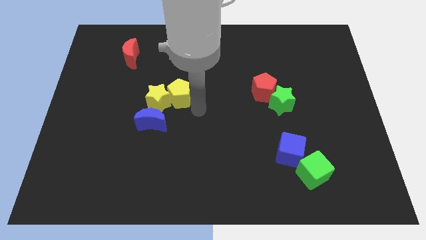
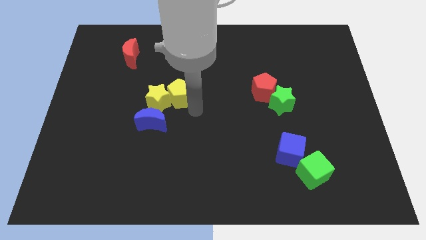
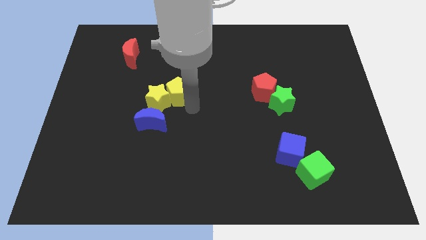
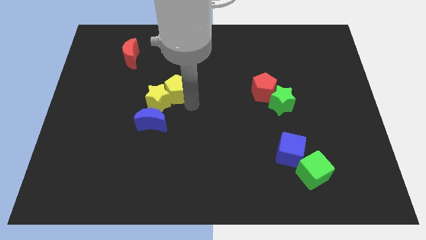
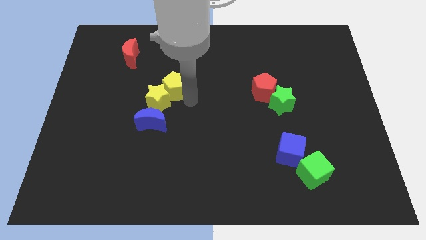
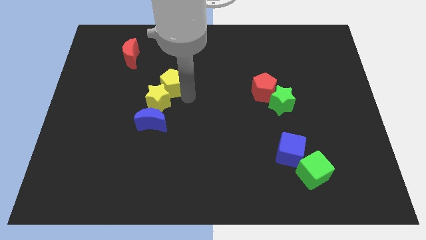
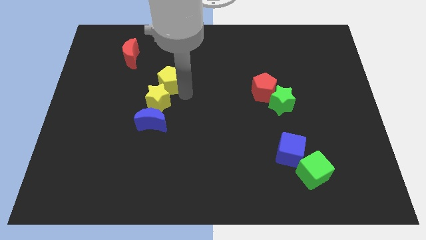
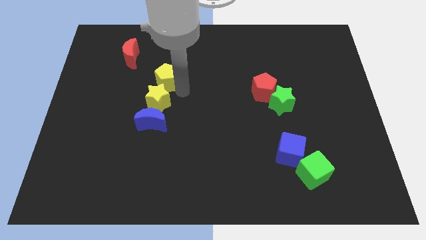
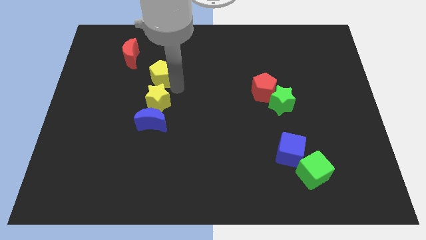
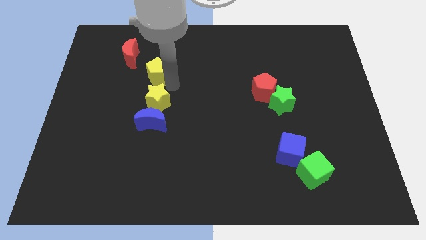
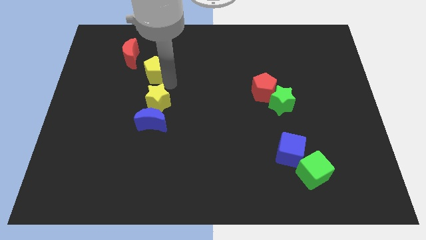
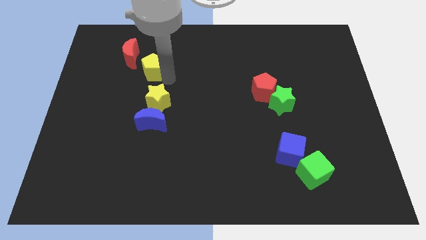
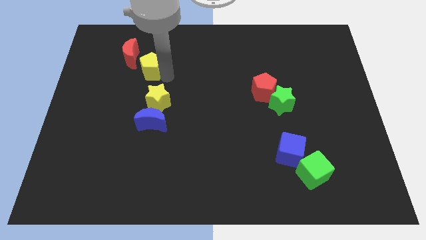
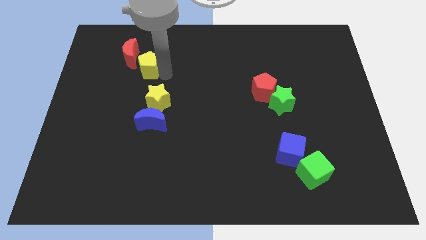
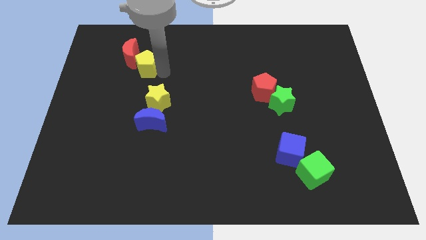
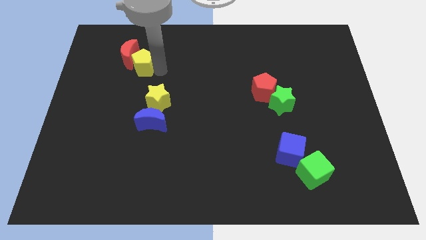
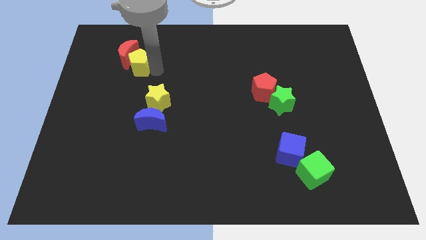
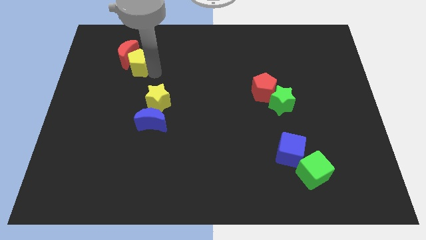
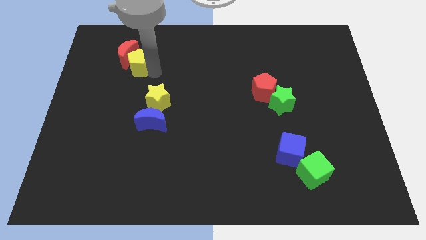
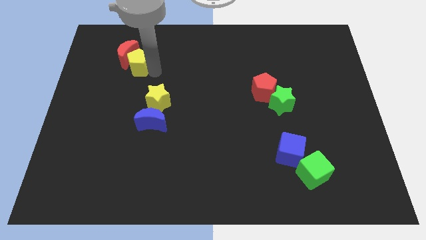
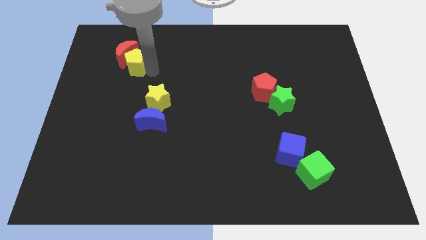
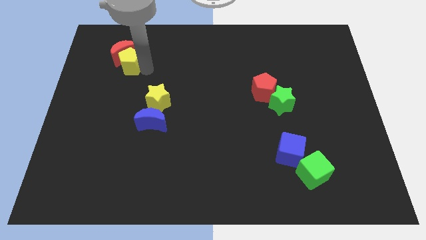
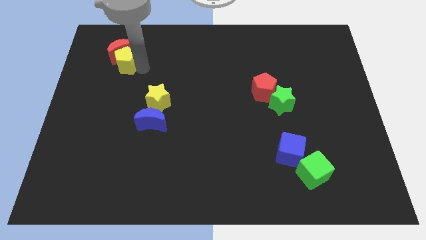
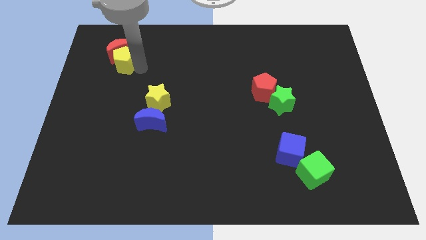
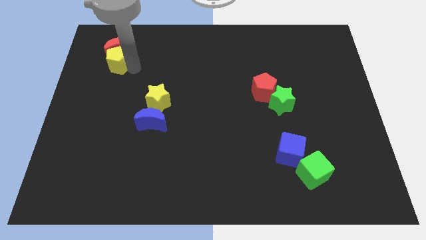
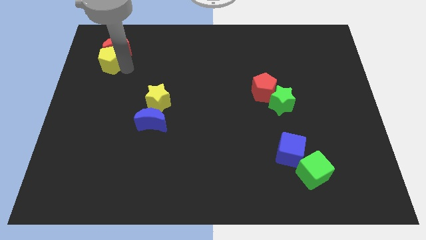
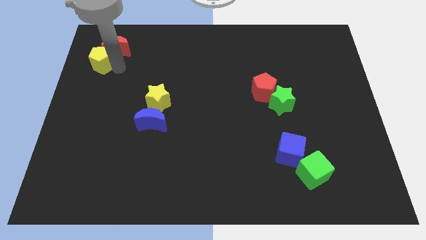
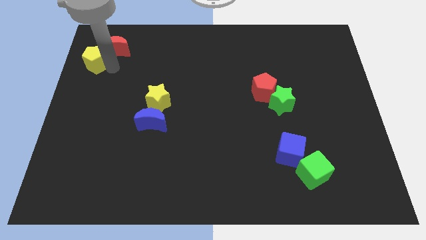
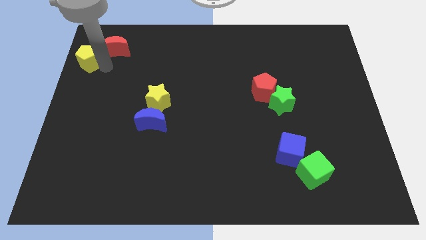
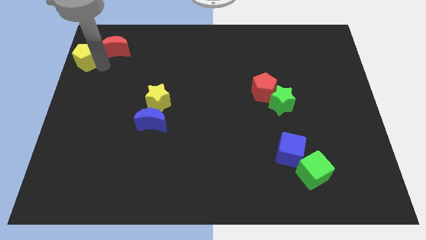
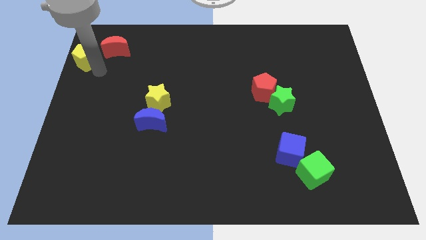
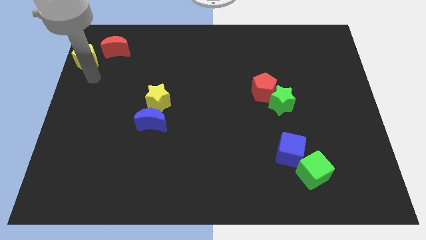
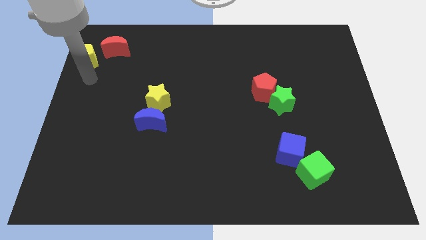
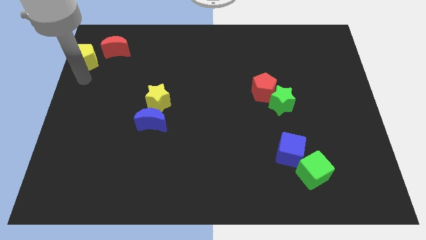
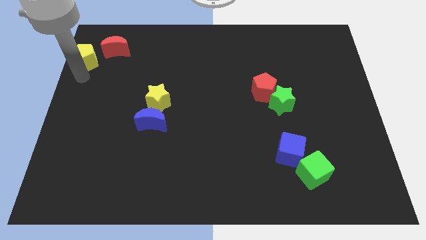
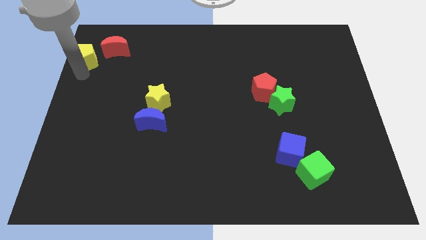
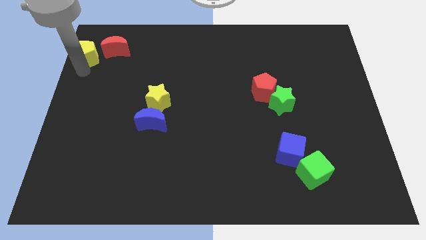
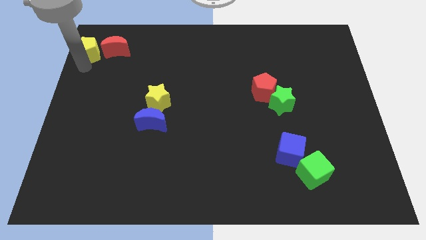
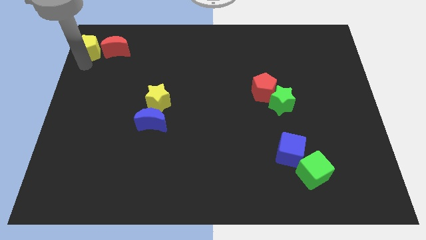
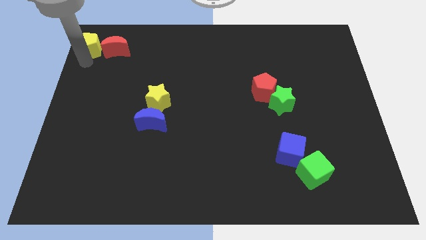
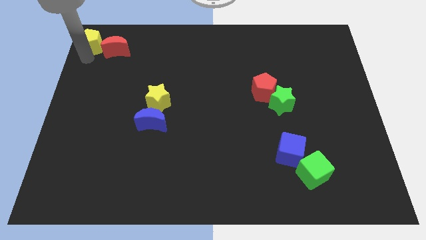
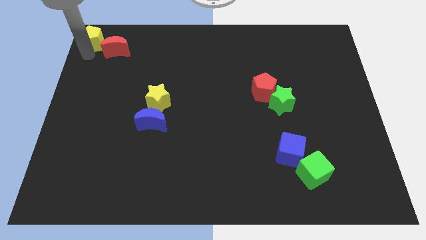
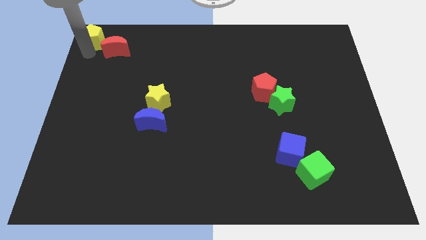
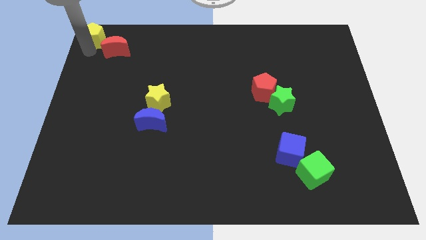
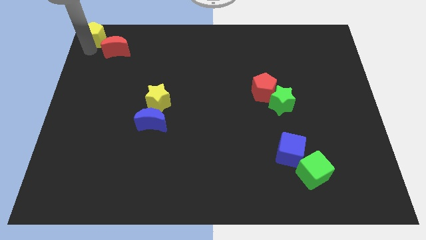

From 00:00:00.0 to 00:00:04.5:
place the yellow pentagon diagonally to the red moon

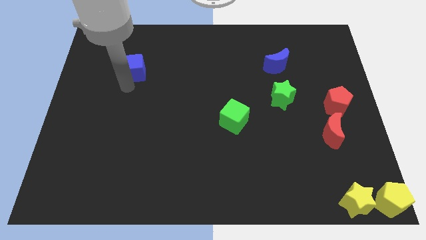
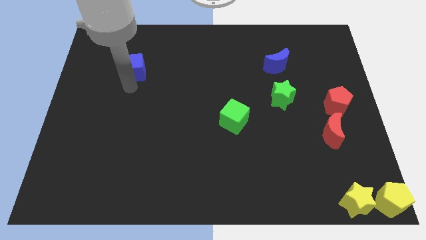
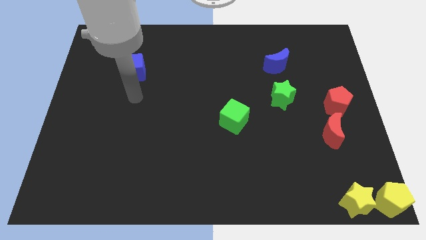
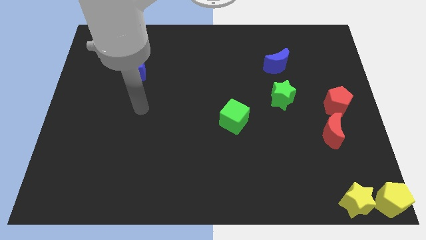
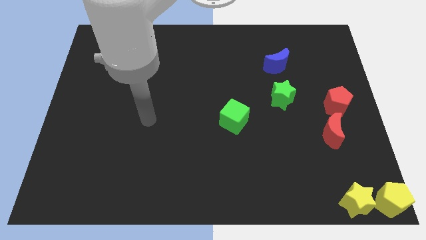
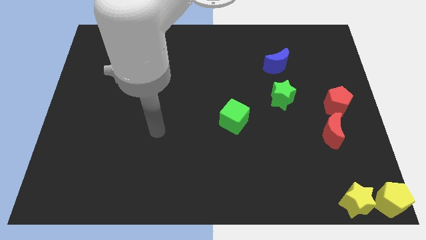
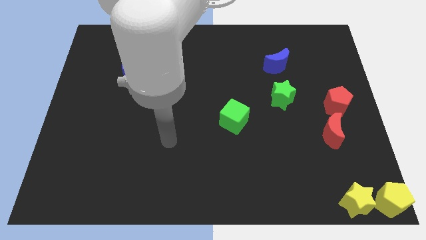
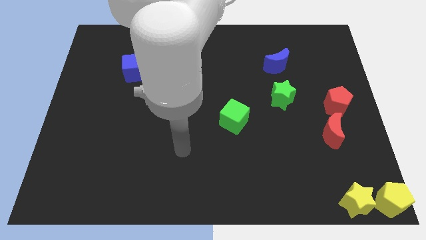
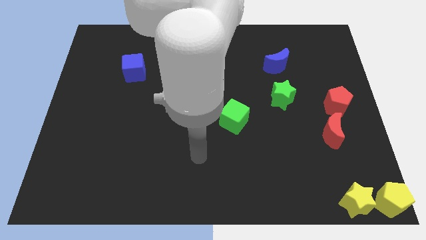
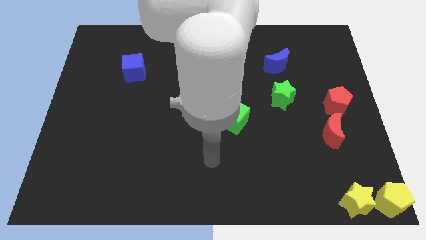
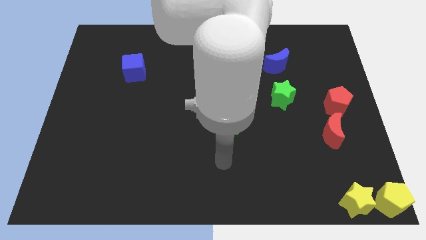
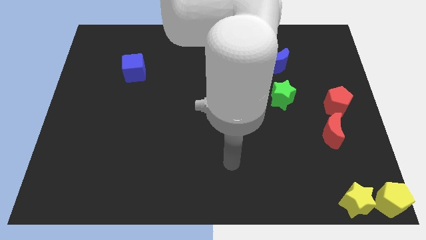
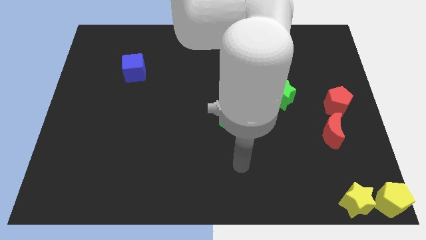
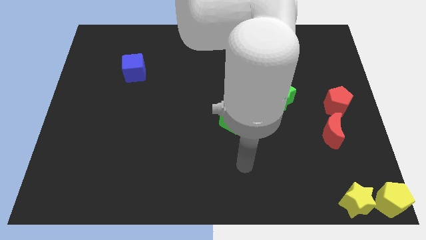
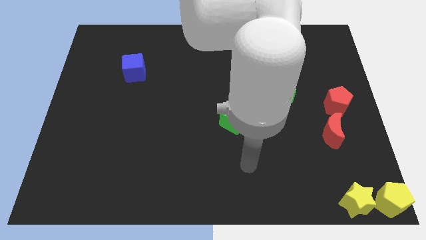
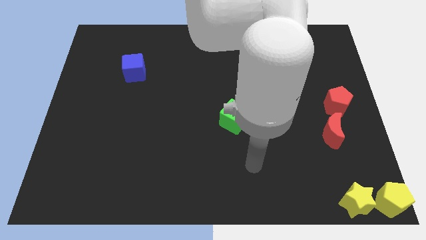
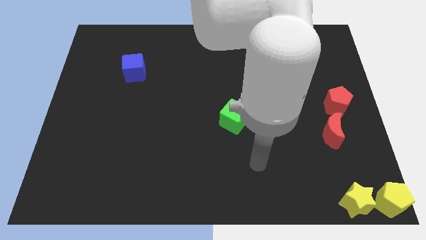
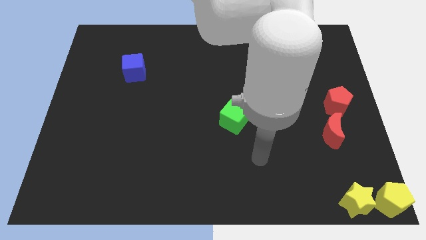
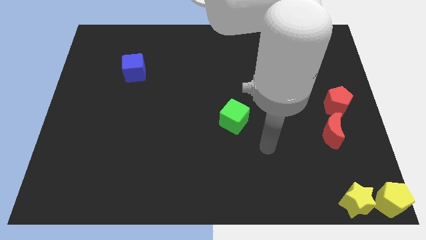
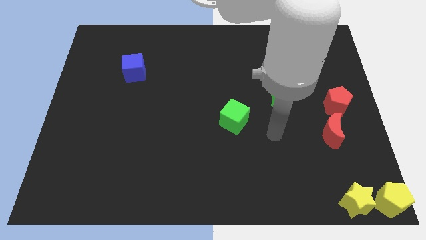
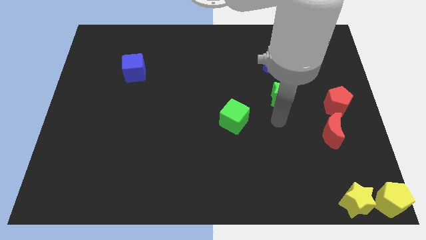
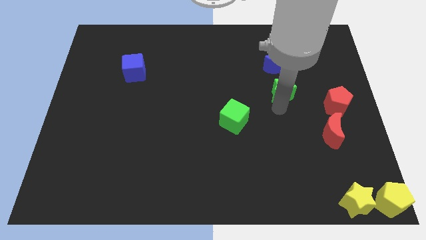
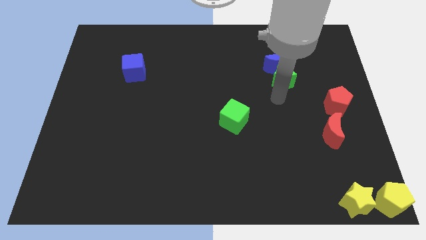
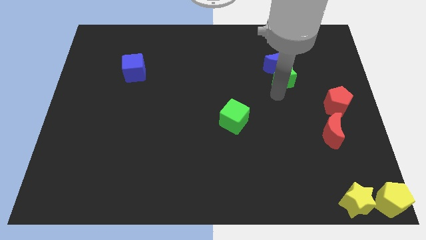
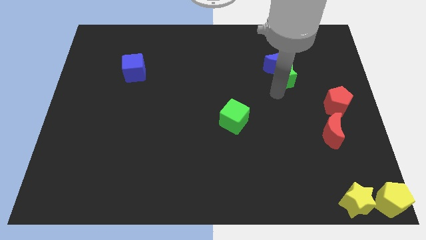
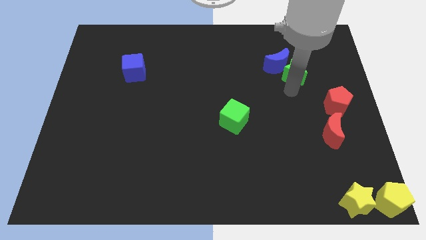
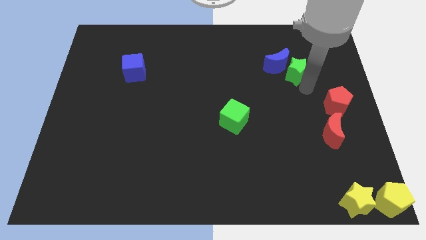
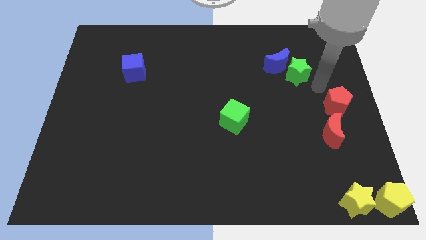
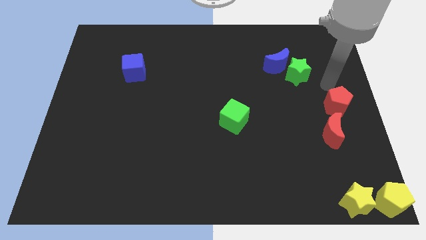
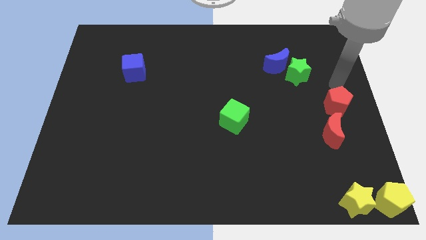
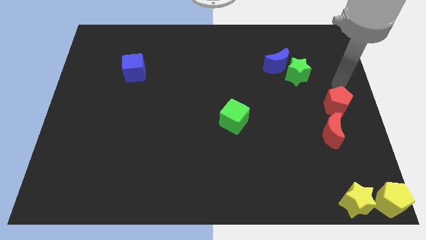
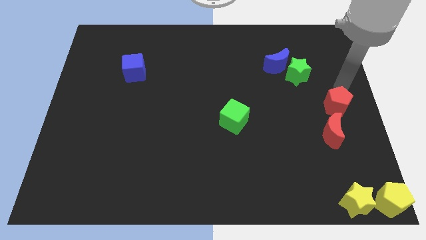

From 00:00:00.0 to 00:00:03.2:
place the green star diagonally to the bottom right of the blue moon

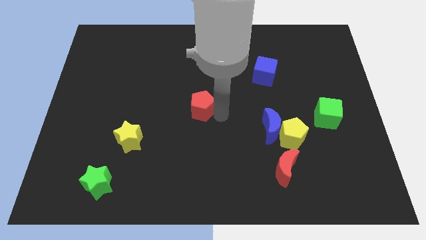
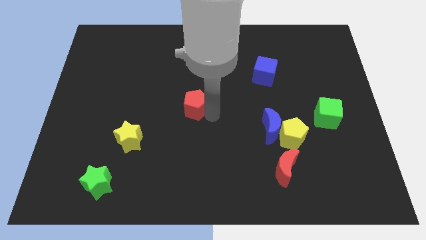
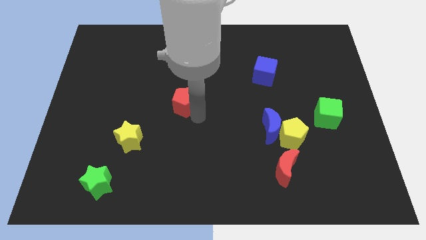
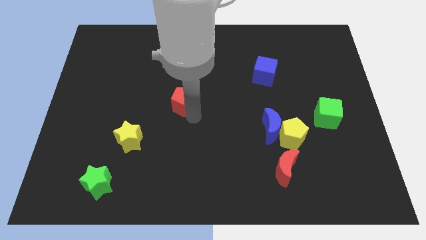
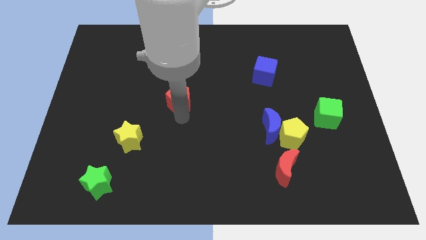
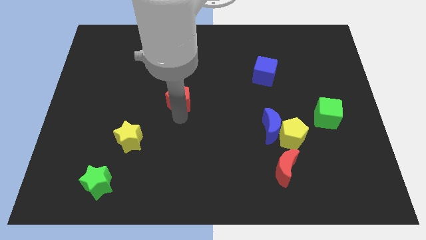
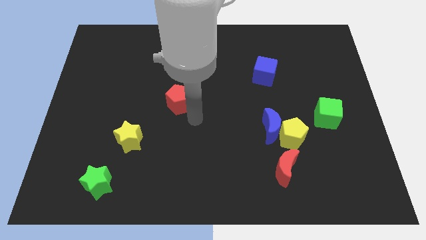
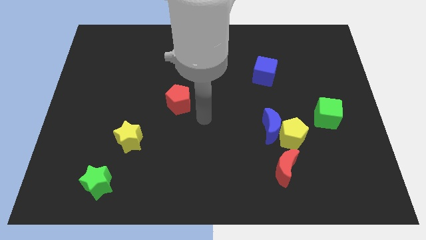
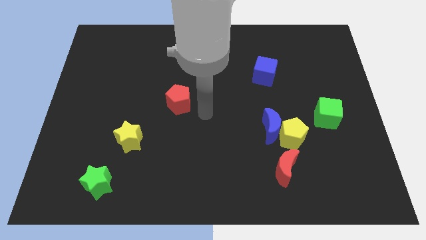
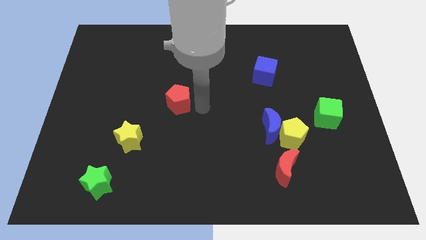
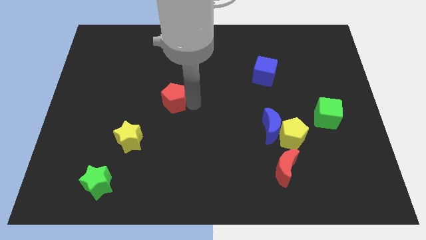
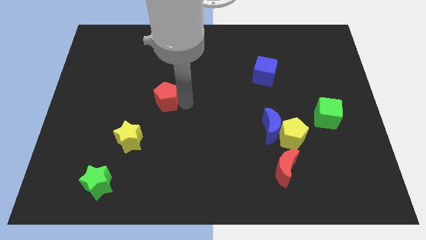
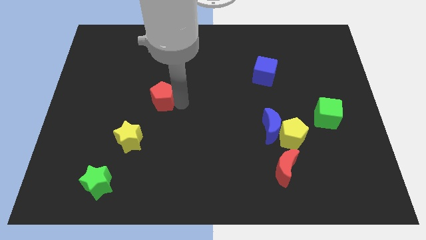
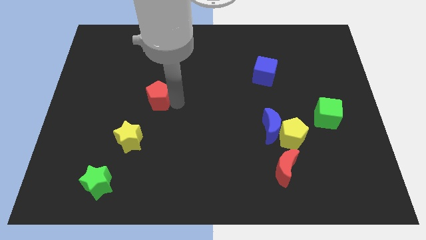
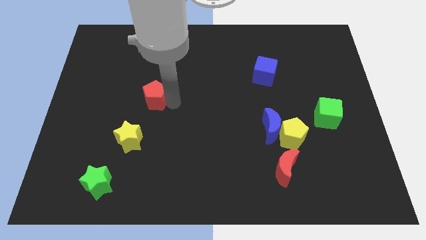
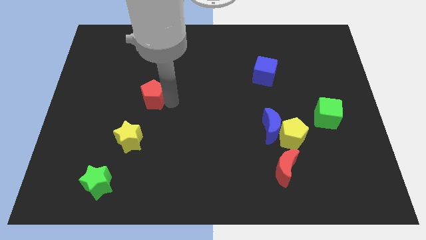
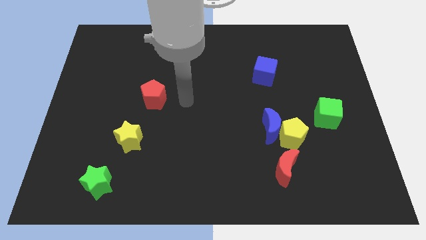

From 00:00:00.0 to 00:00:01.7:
push the red pentagon slightly to the left
